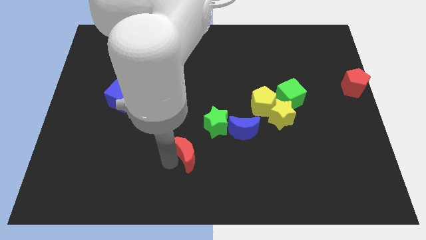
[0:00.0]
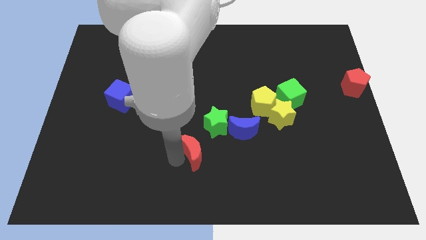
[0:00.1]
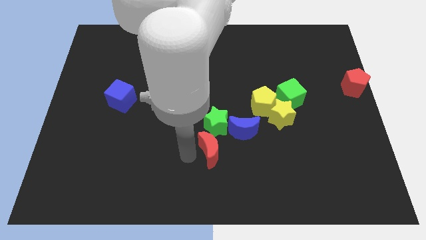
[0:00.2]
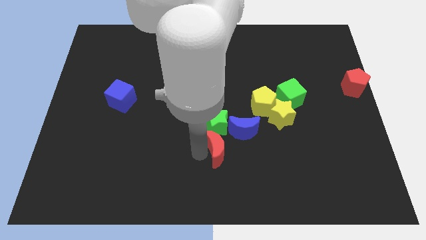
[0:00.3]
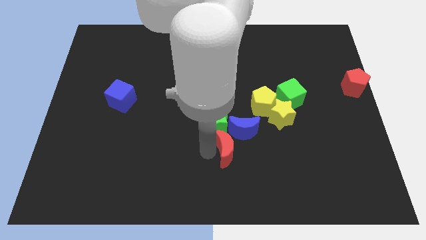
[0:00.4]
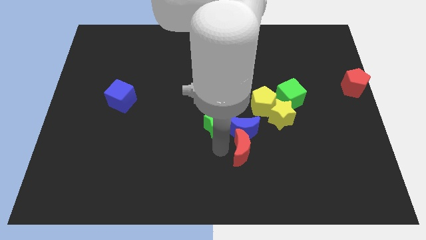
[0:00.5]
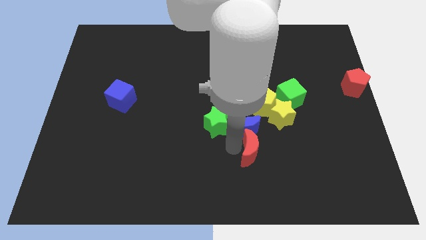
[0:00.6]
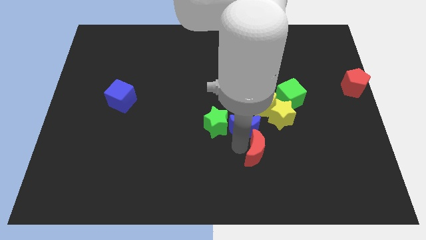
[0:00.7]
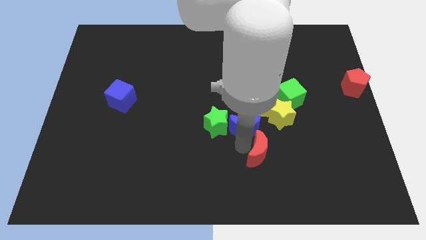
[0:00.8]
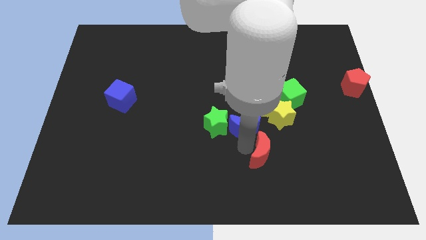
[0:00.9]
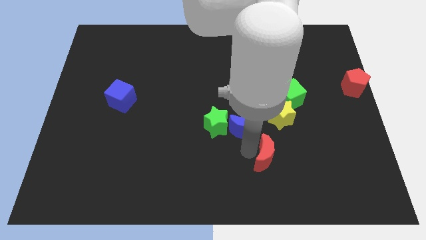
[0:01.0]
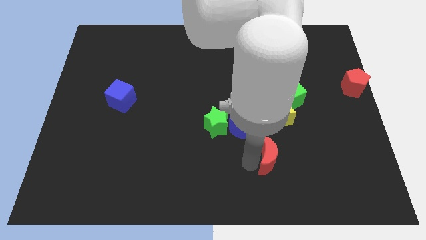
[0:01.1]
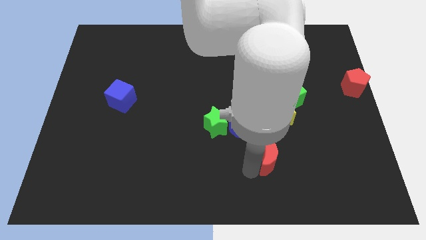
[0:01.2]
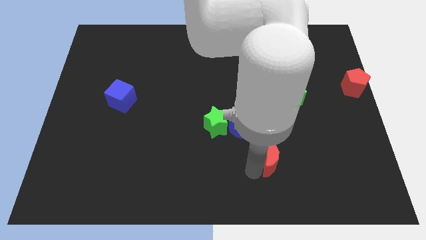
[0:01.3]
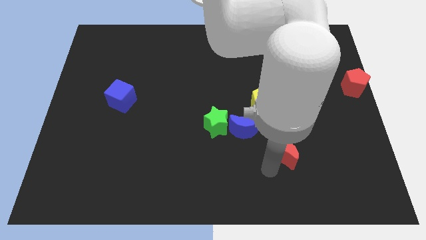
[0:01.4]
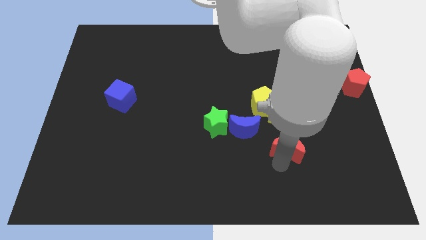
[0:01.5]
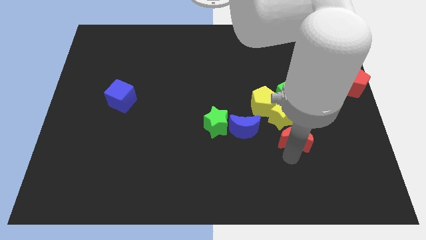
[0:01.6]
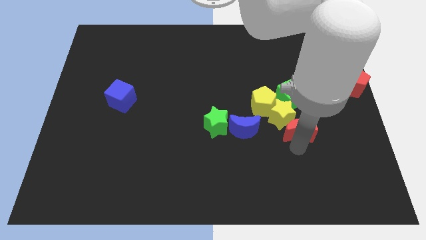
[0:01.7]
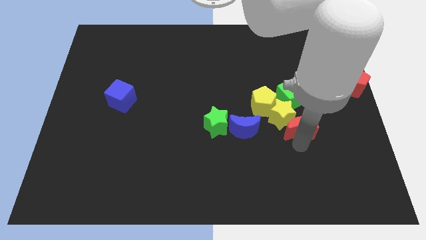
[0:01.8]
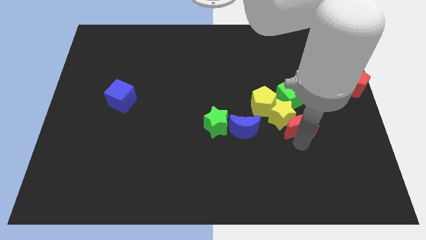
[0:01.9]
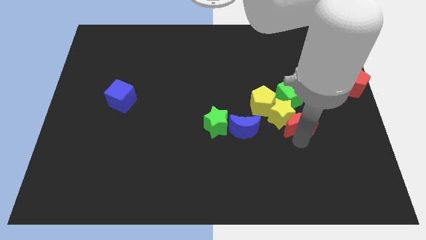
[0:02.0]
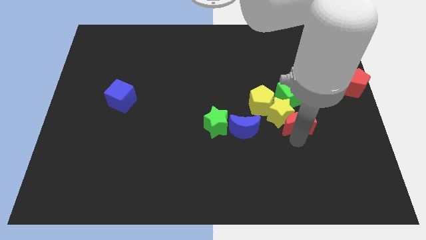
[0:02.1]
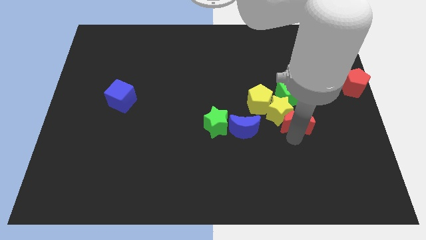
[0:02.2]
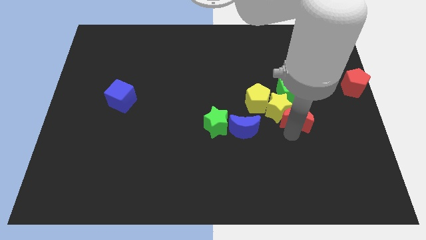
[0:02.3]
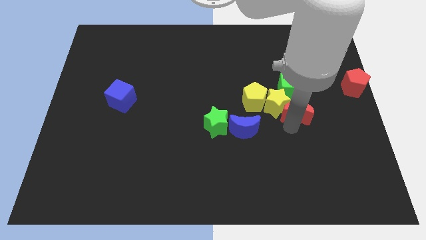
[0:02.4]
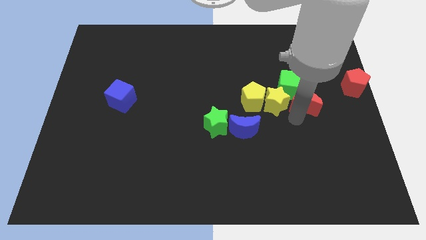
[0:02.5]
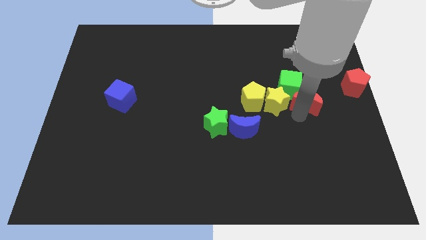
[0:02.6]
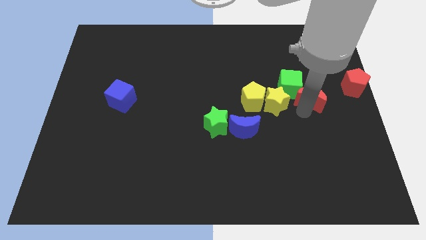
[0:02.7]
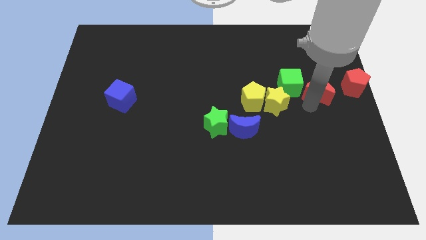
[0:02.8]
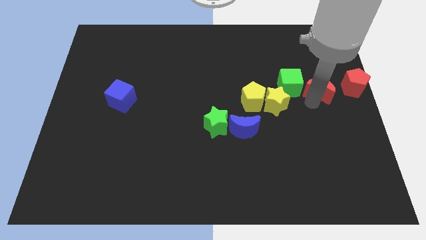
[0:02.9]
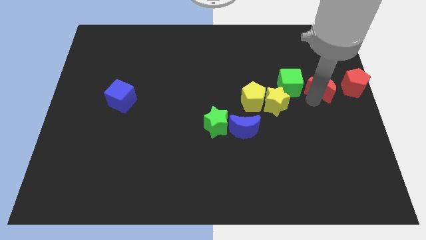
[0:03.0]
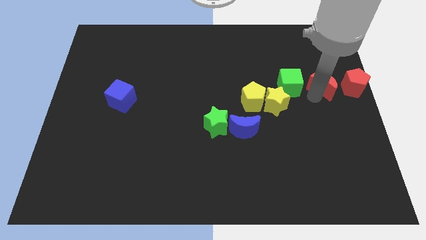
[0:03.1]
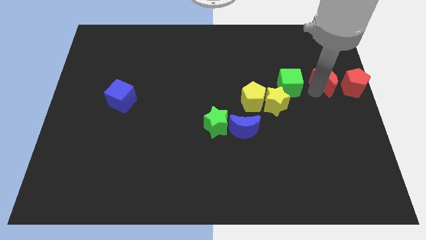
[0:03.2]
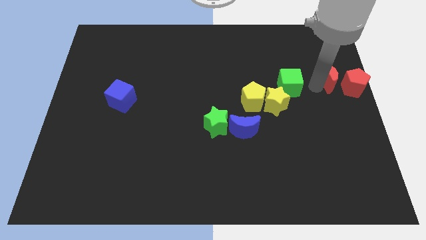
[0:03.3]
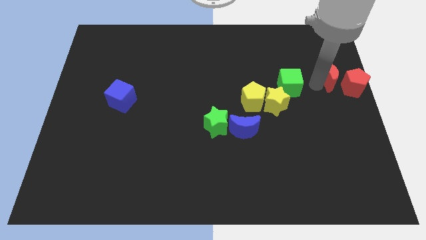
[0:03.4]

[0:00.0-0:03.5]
put the red moon left to the red pentagon

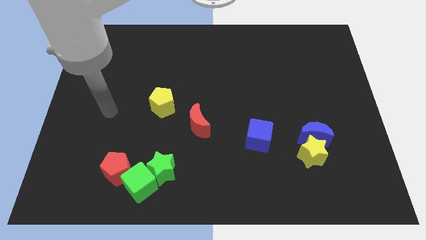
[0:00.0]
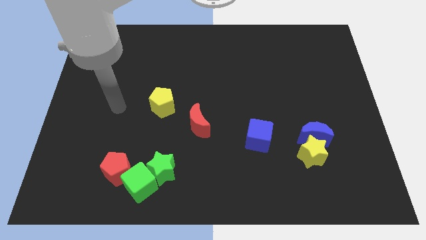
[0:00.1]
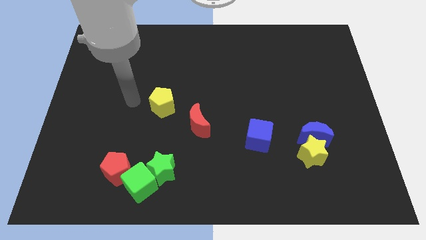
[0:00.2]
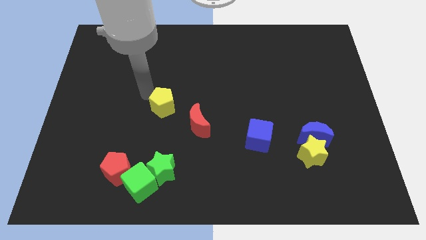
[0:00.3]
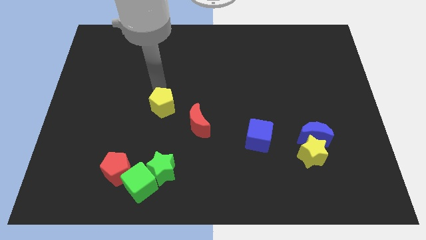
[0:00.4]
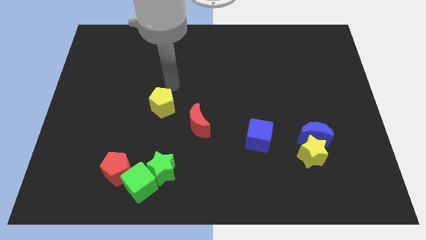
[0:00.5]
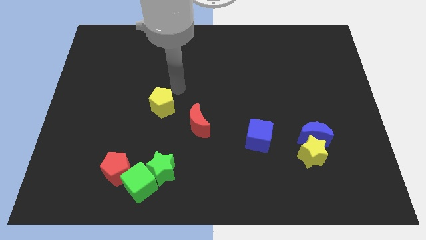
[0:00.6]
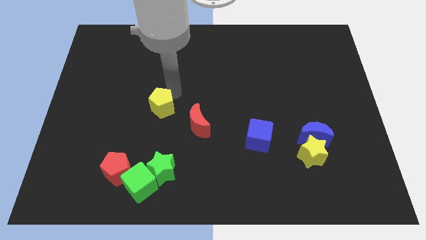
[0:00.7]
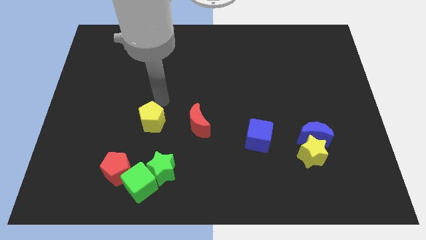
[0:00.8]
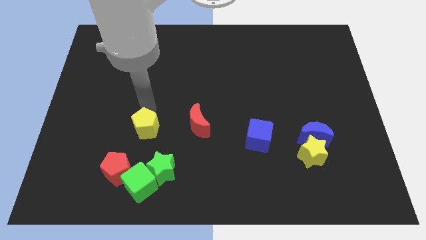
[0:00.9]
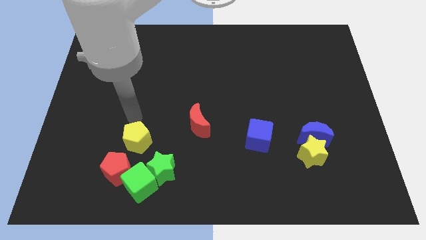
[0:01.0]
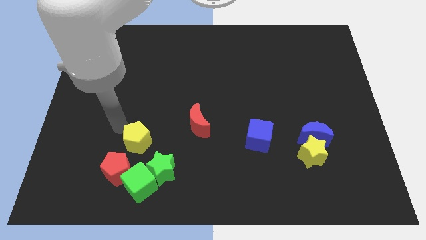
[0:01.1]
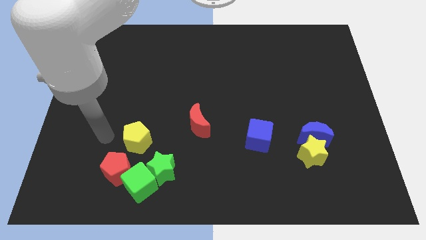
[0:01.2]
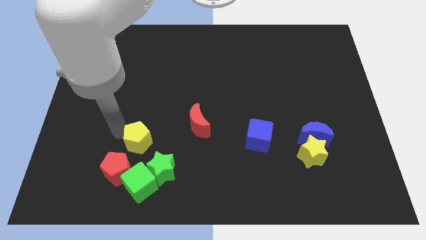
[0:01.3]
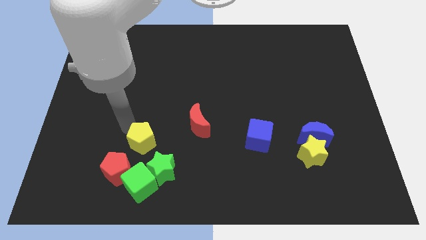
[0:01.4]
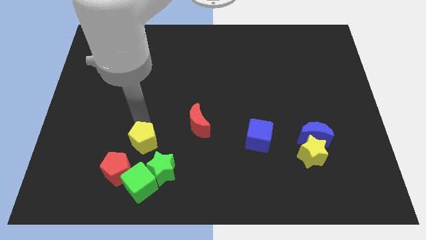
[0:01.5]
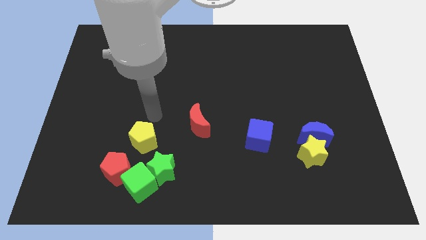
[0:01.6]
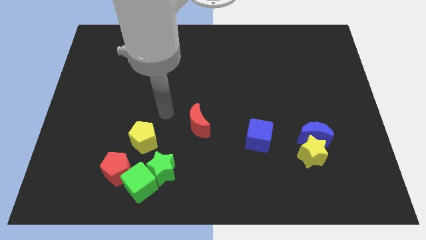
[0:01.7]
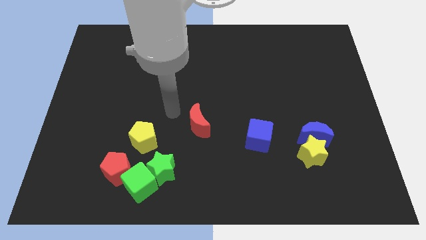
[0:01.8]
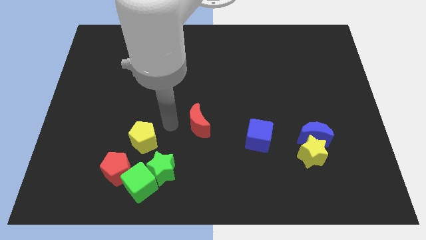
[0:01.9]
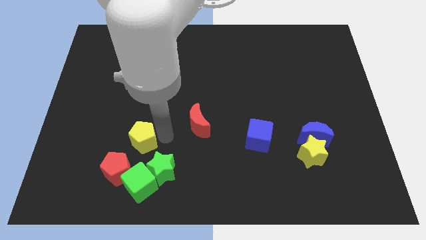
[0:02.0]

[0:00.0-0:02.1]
place yellow pentagon above the green cube

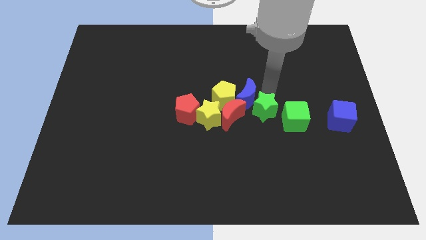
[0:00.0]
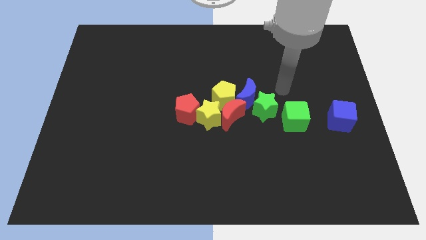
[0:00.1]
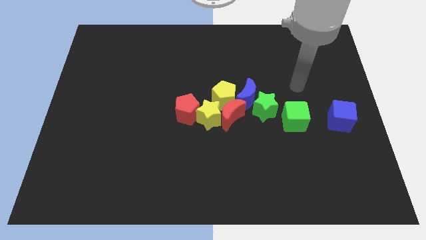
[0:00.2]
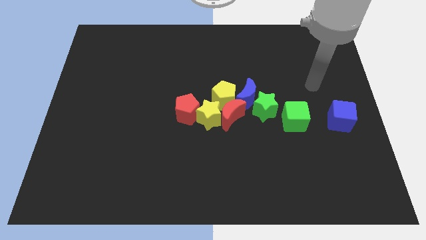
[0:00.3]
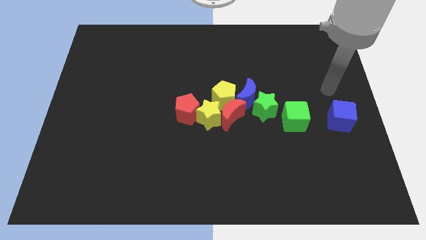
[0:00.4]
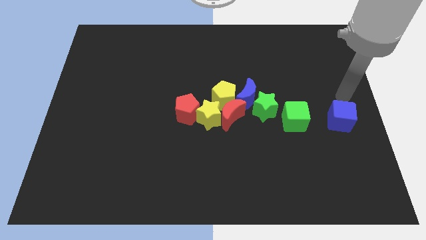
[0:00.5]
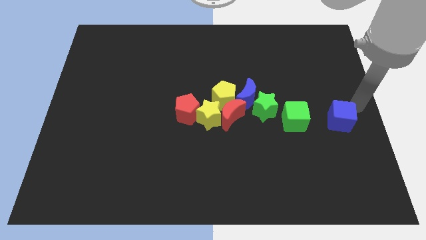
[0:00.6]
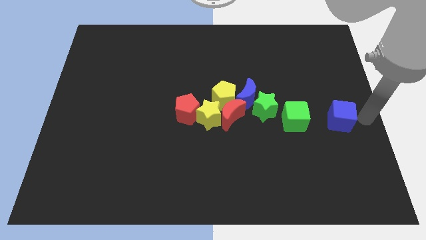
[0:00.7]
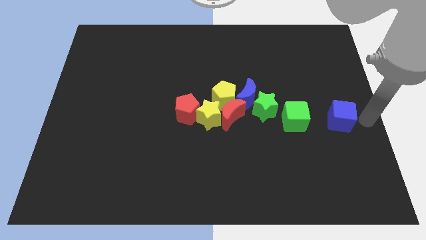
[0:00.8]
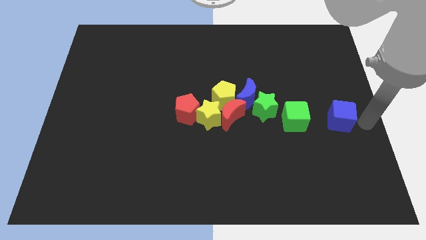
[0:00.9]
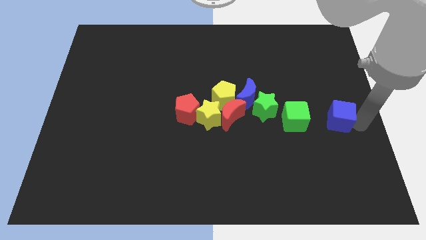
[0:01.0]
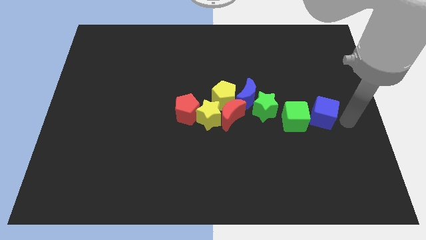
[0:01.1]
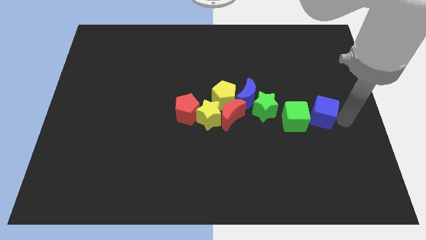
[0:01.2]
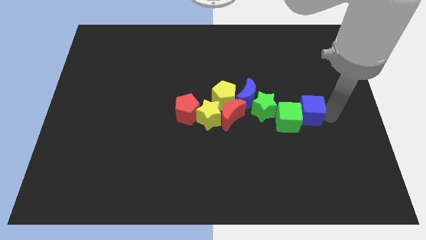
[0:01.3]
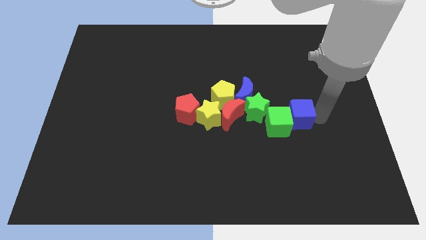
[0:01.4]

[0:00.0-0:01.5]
push the blue cube into the green cube

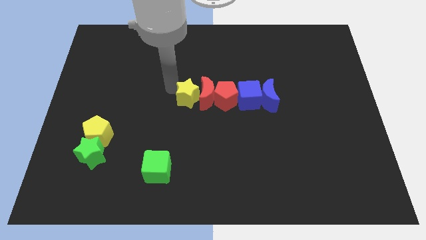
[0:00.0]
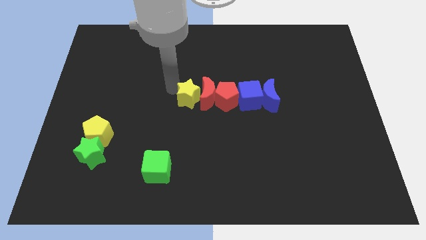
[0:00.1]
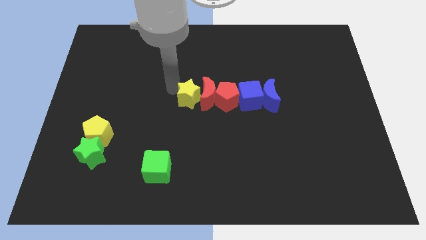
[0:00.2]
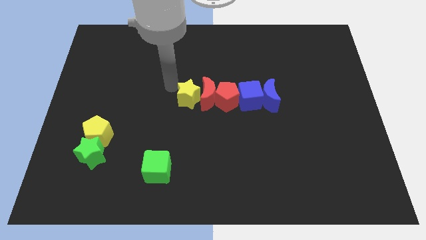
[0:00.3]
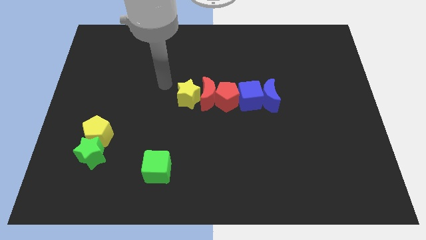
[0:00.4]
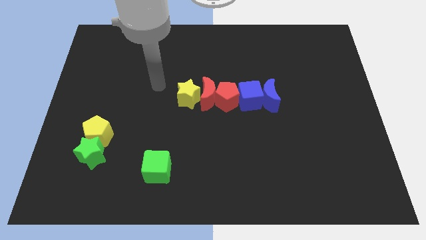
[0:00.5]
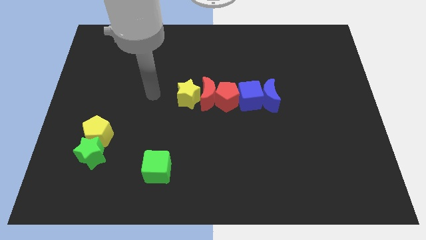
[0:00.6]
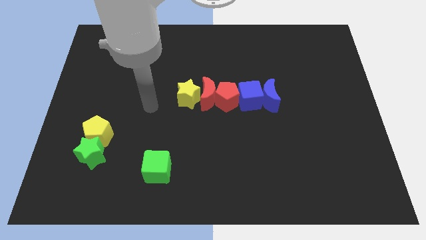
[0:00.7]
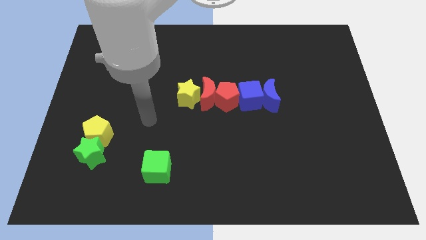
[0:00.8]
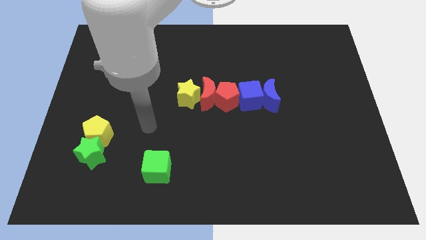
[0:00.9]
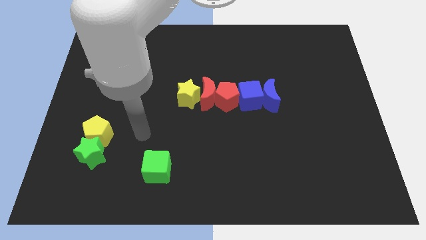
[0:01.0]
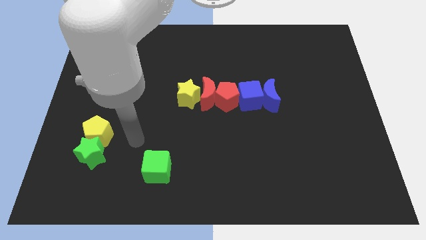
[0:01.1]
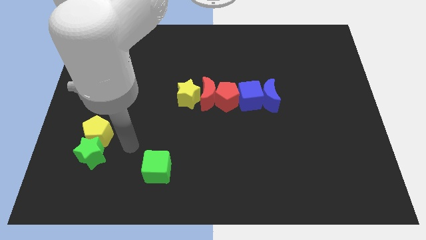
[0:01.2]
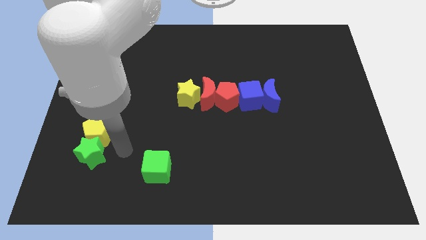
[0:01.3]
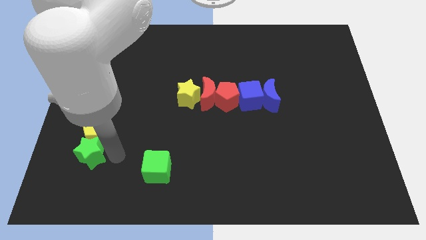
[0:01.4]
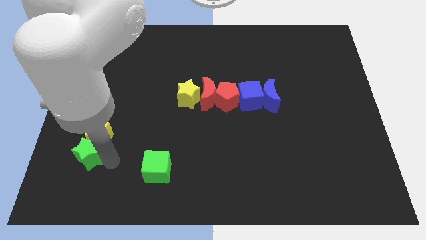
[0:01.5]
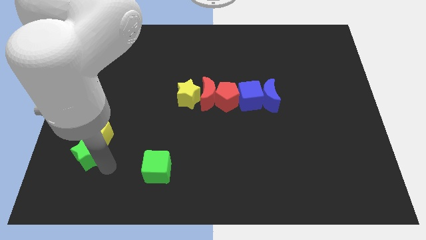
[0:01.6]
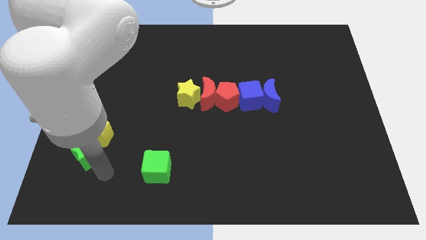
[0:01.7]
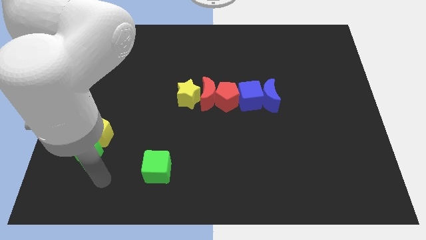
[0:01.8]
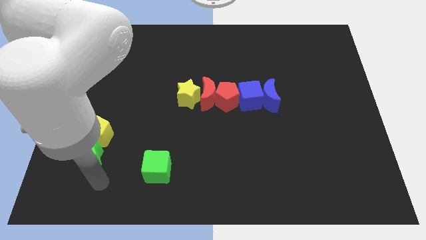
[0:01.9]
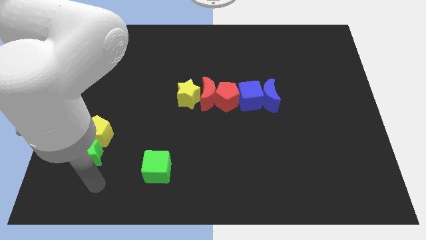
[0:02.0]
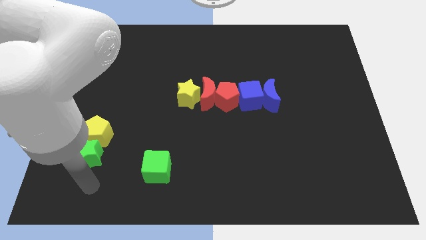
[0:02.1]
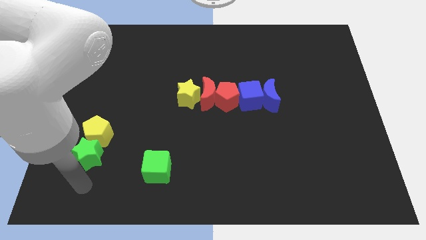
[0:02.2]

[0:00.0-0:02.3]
move your arm bottom of the green star
